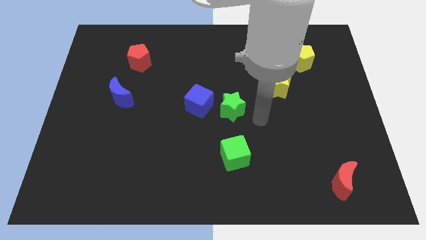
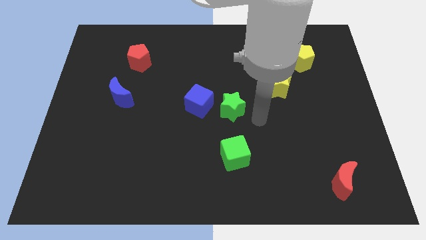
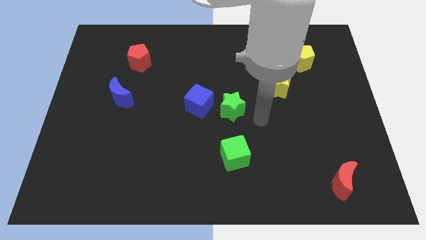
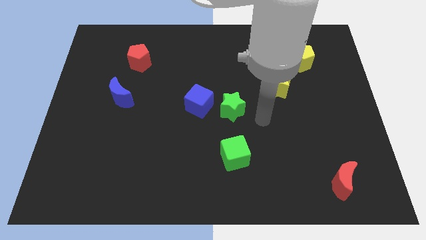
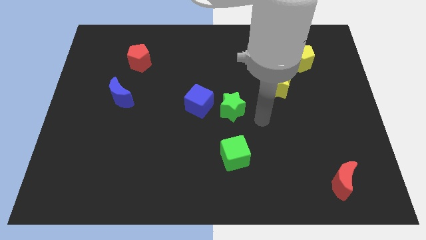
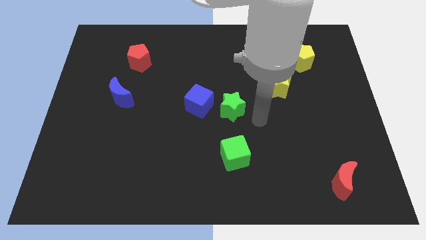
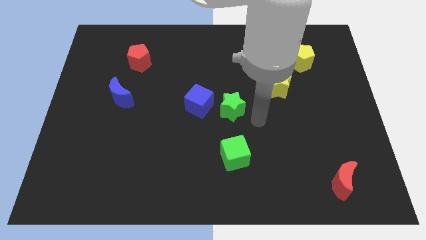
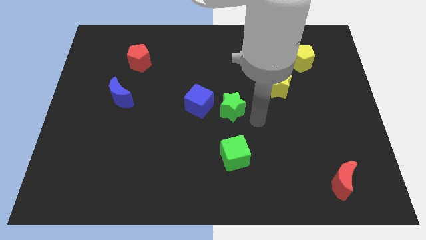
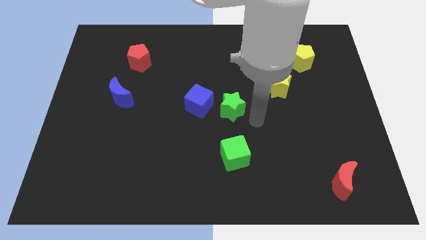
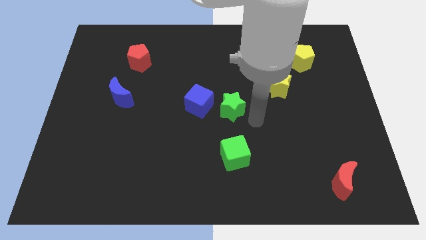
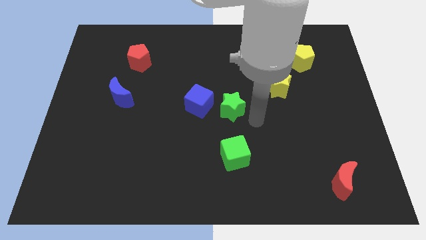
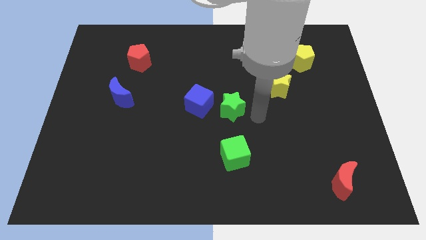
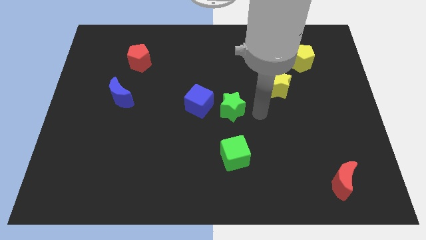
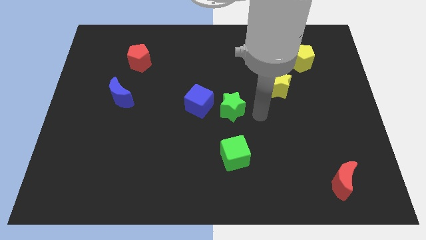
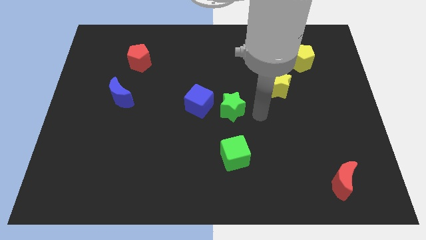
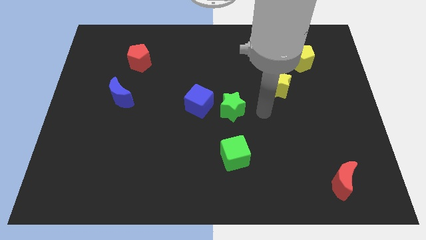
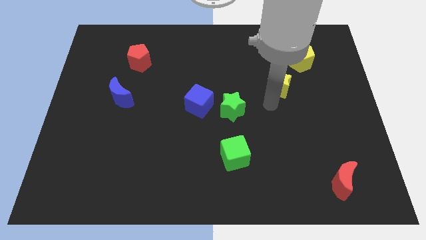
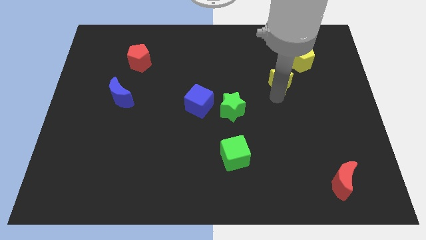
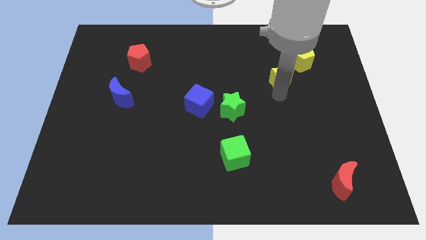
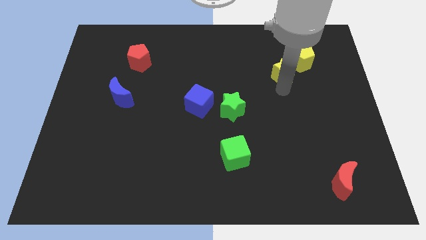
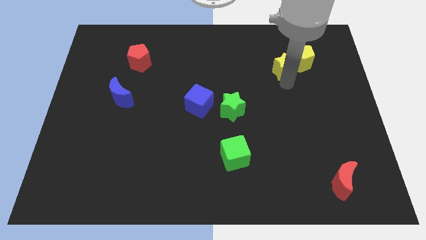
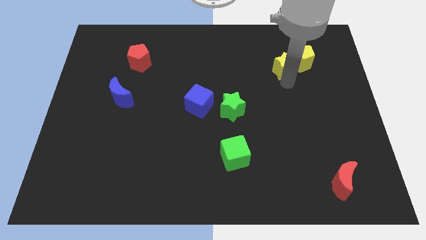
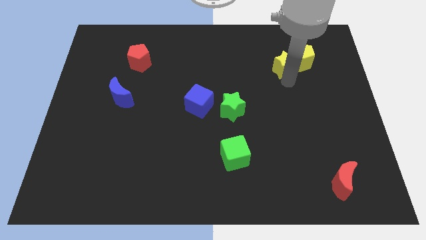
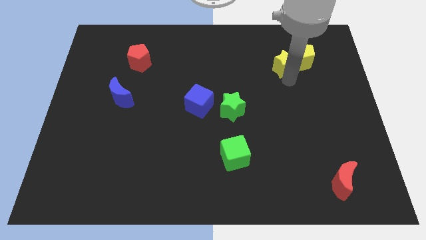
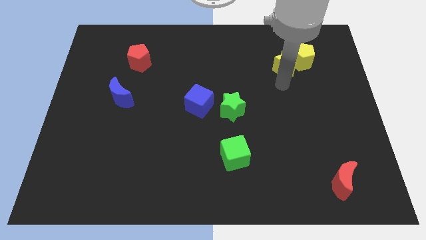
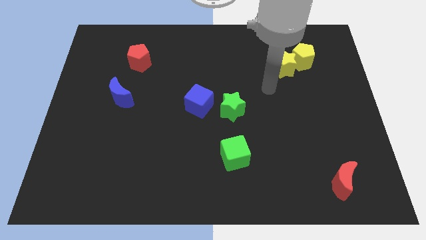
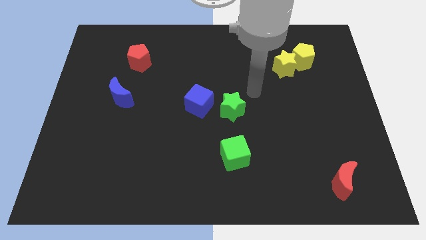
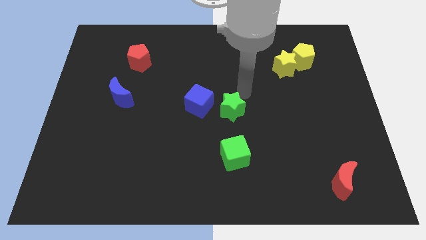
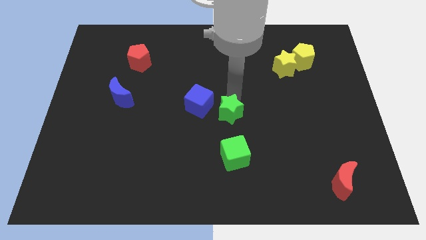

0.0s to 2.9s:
move the yellow star into the yellow pentagon

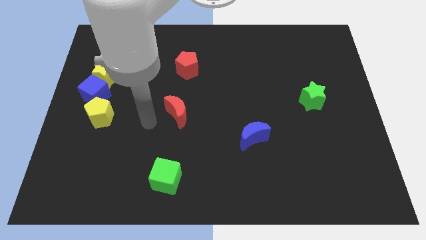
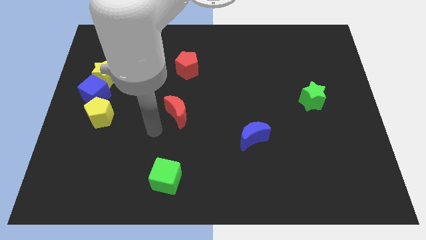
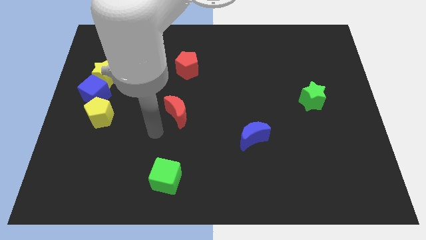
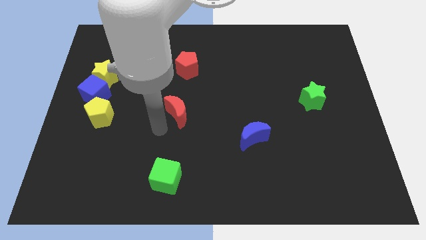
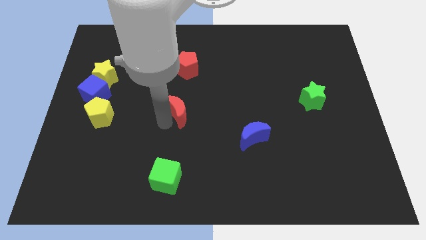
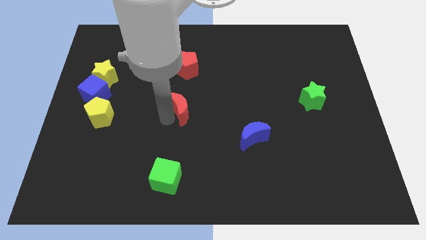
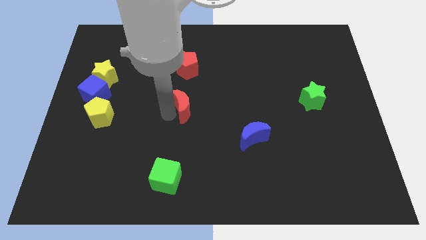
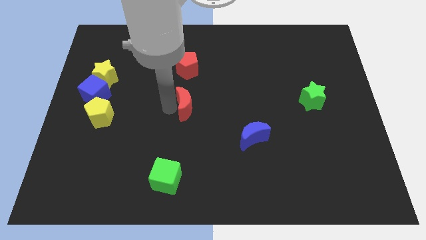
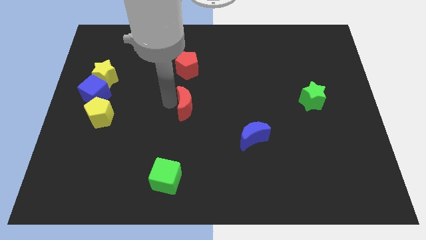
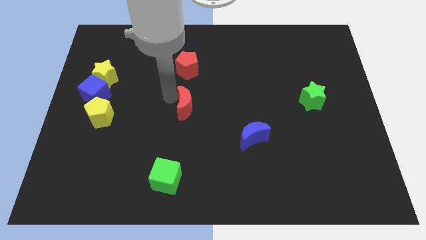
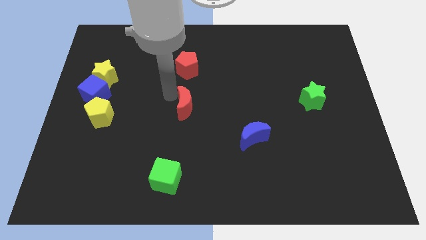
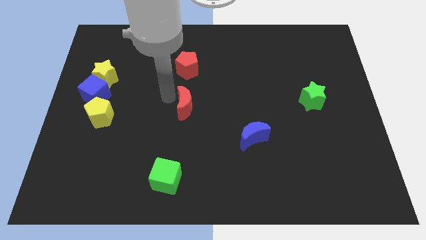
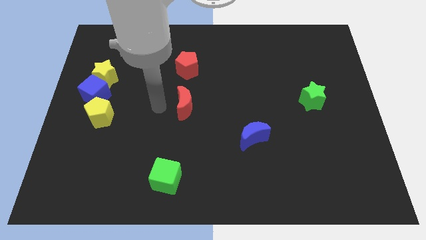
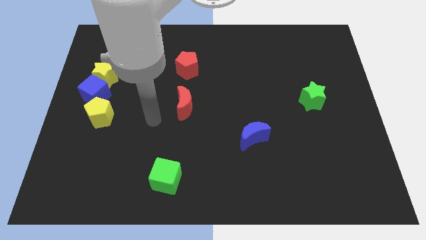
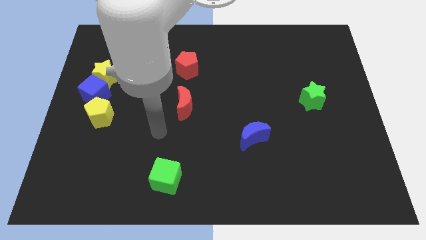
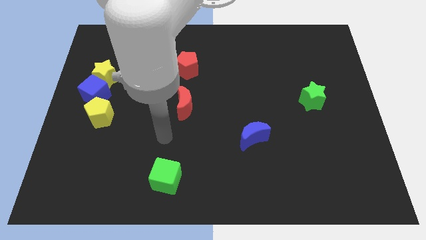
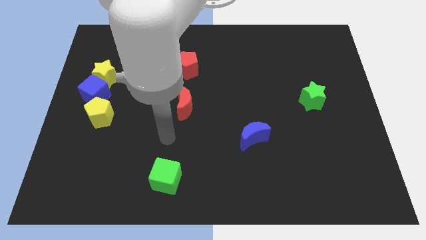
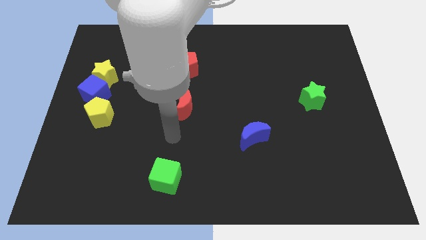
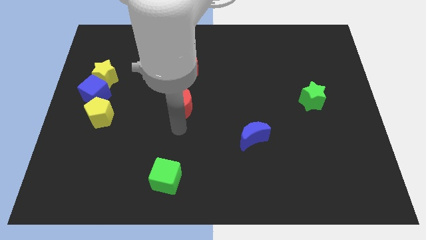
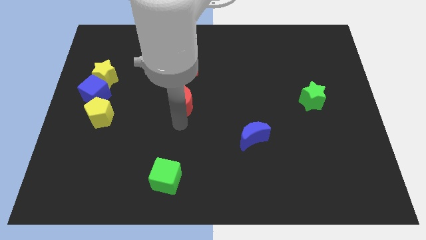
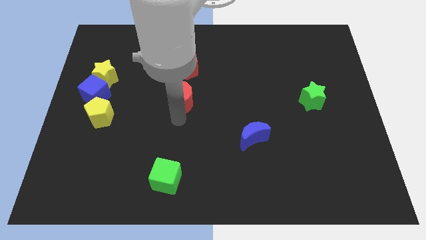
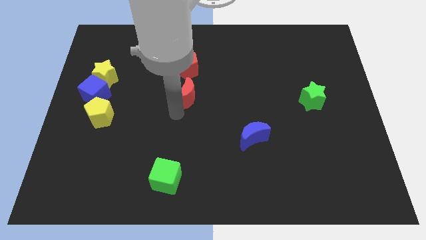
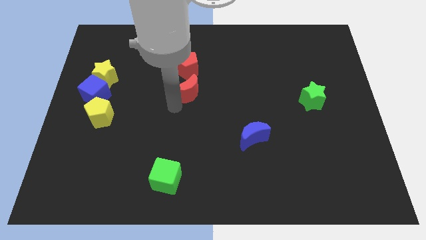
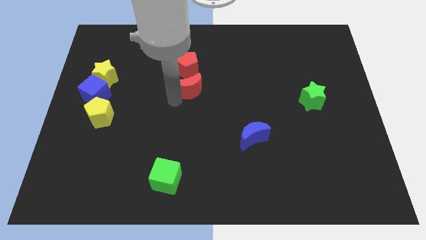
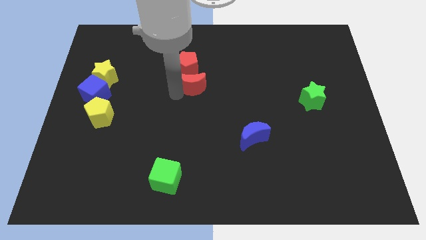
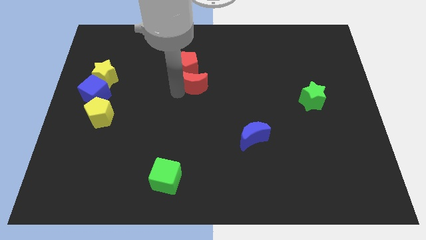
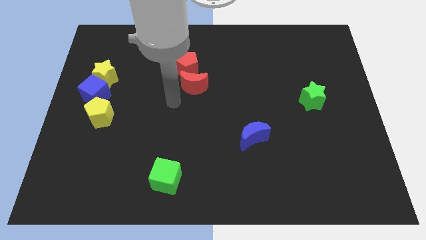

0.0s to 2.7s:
push the red moon into the red red pentagon

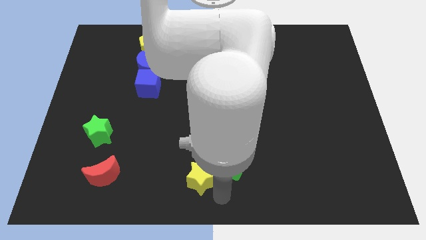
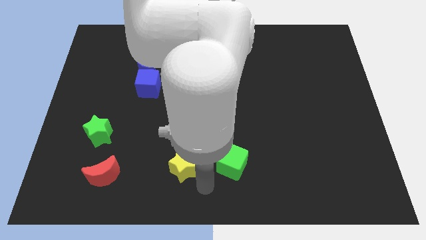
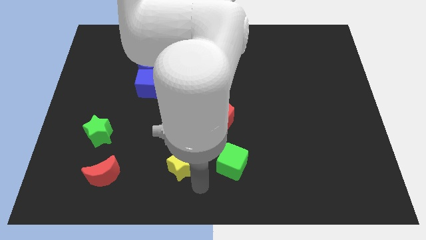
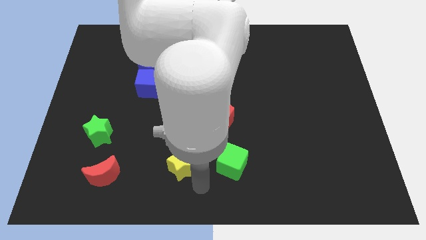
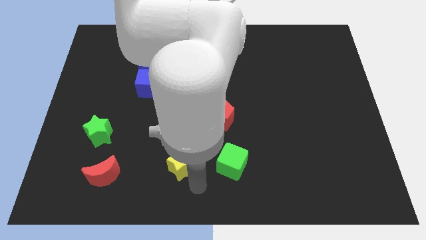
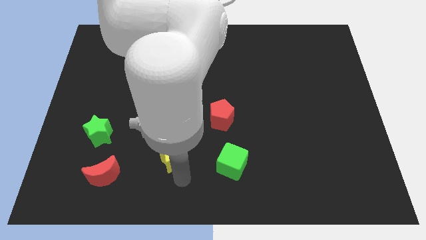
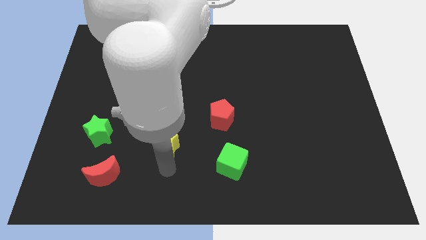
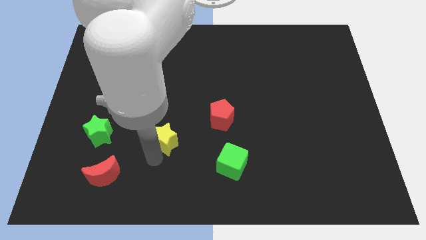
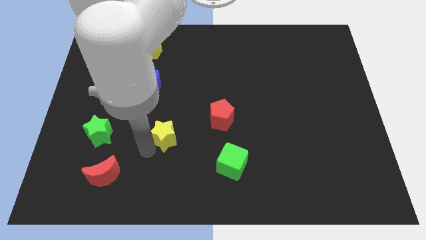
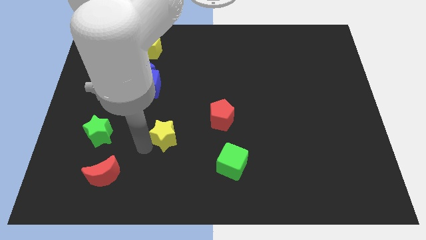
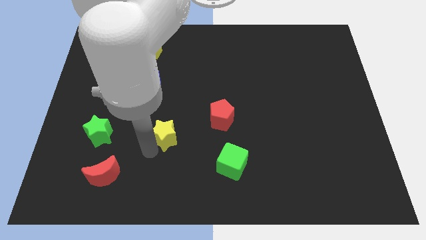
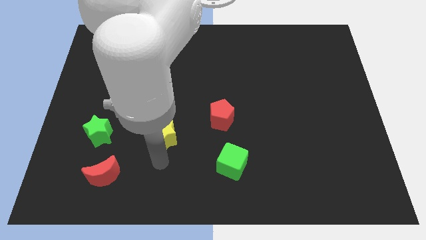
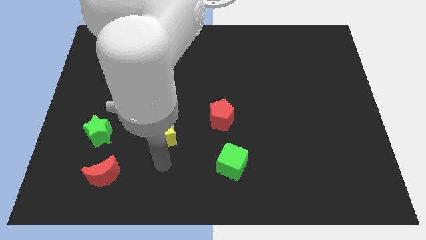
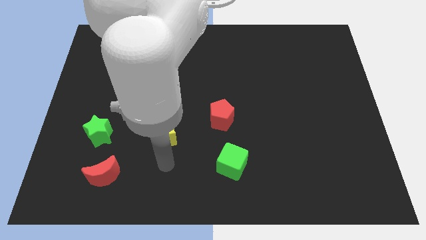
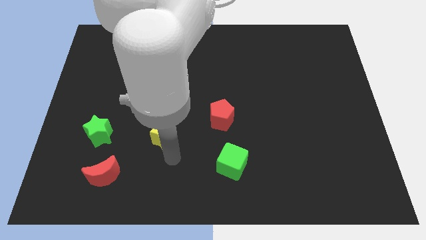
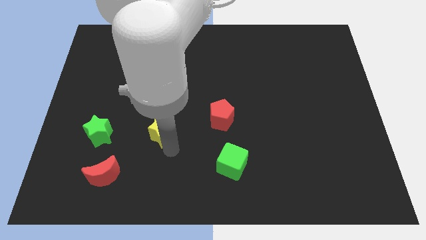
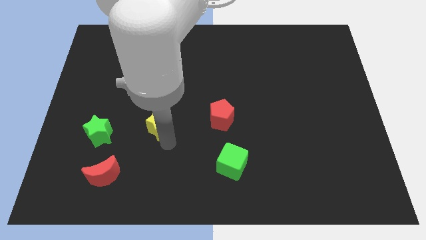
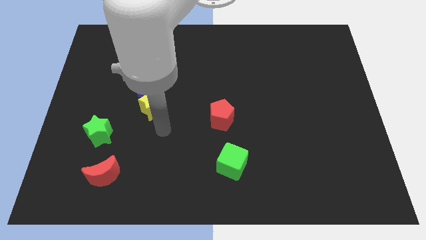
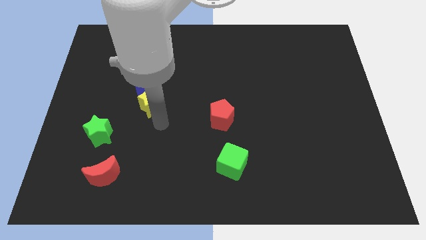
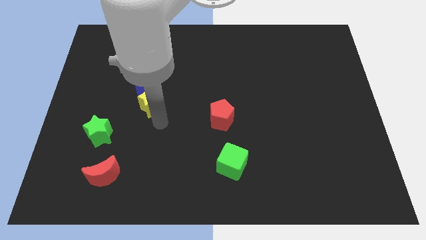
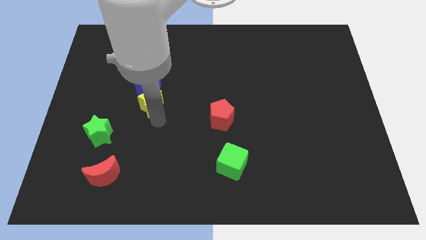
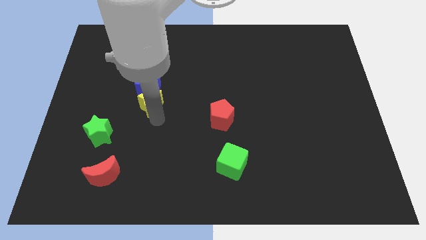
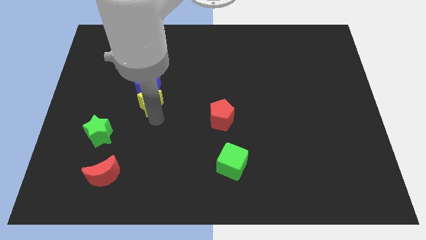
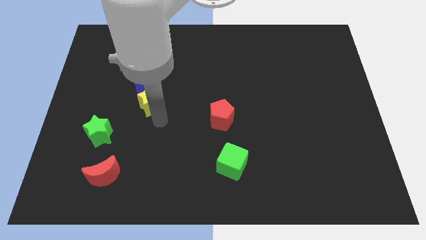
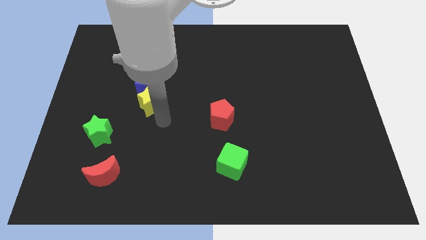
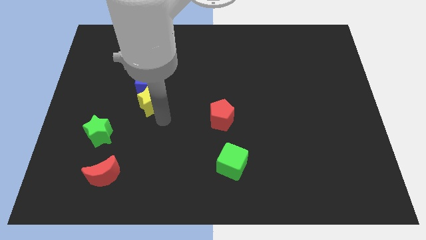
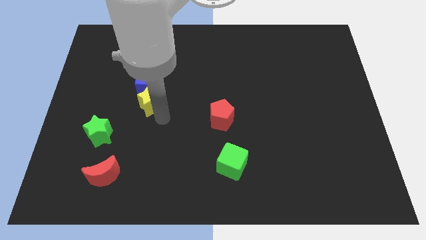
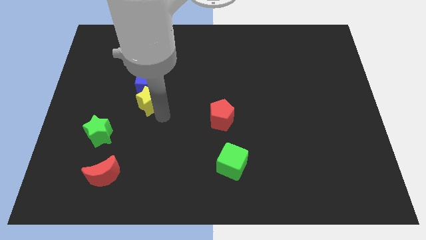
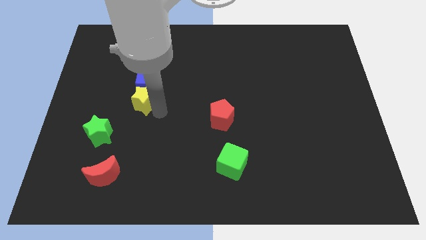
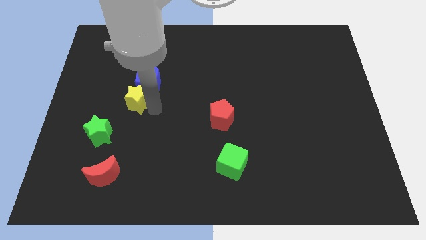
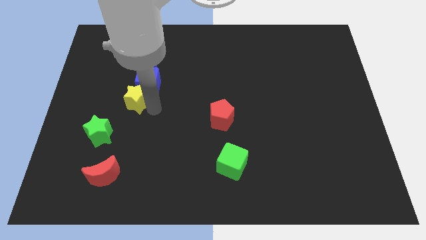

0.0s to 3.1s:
move yellow star into blue cube

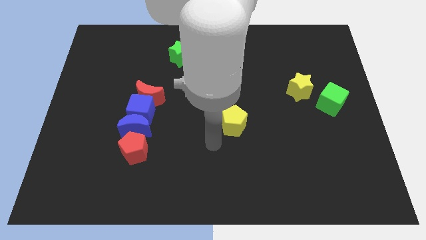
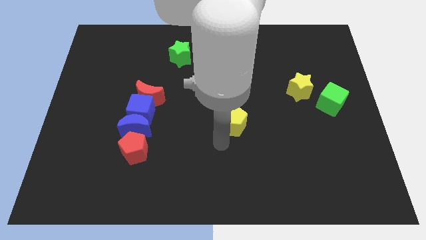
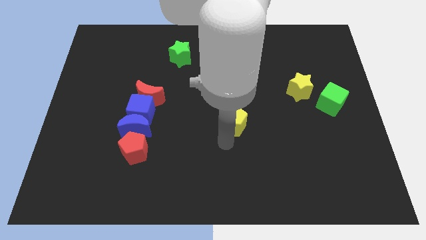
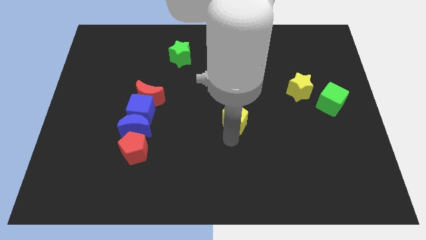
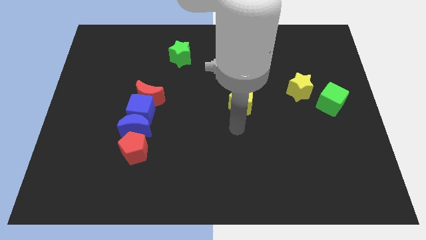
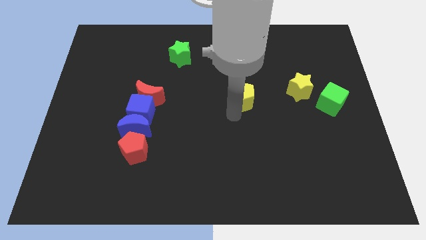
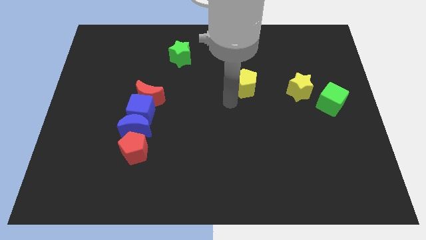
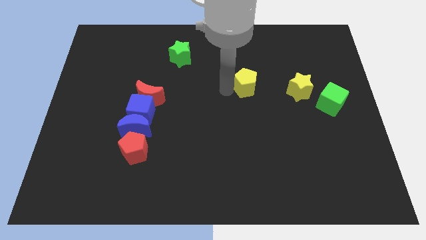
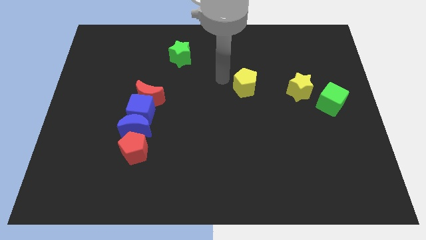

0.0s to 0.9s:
push the yellow pentagon to the left of the yellow star
